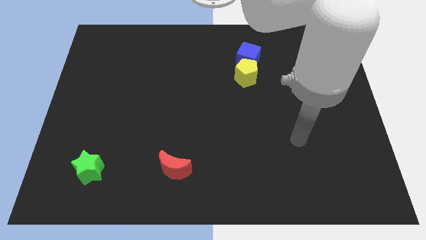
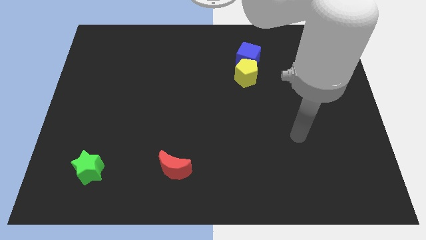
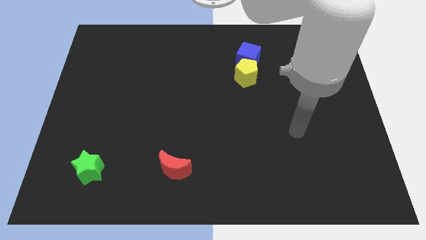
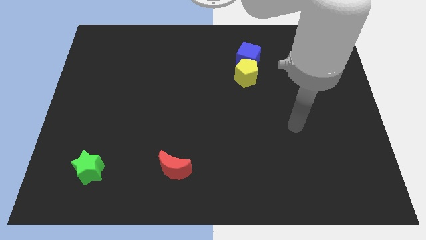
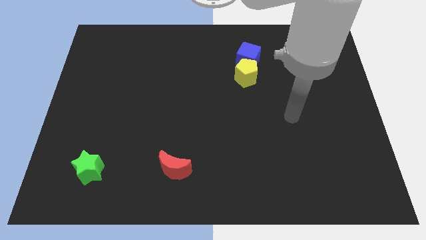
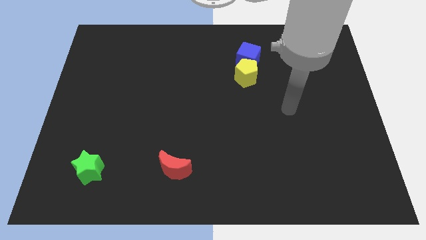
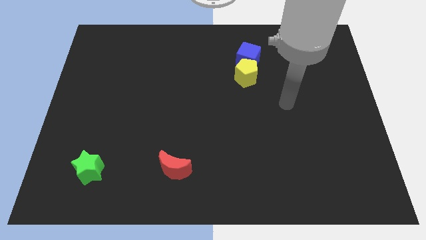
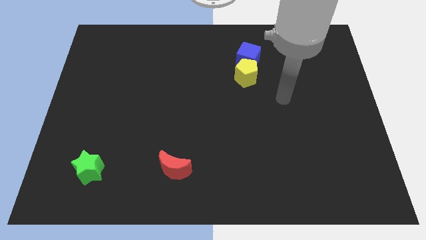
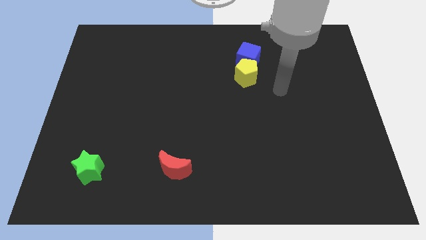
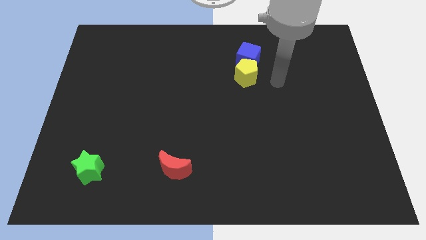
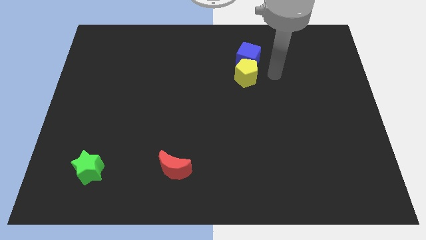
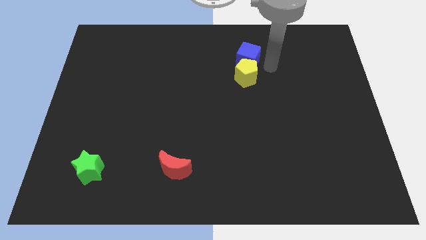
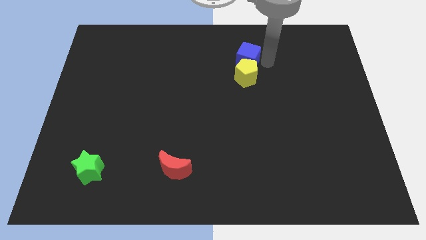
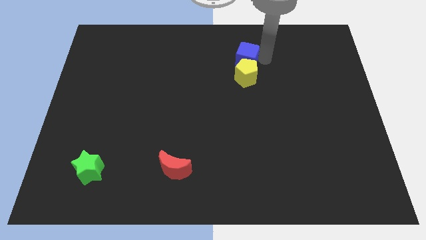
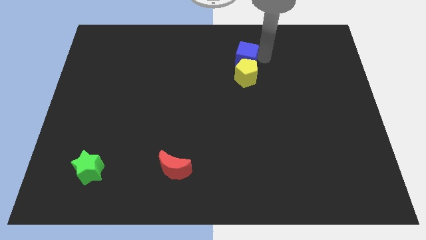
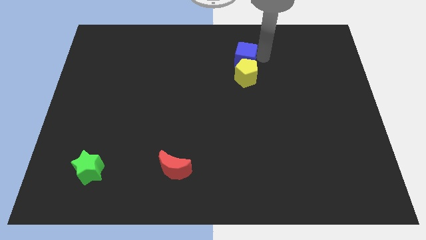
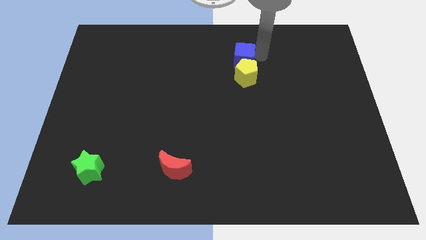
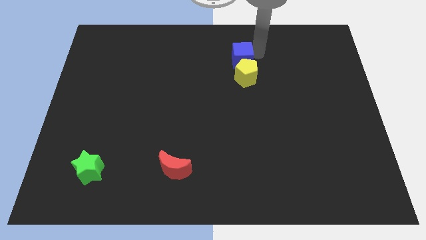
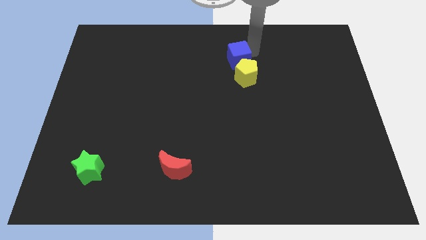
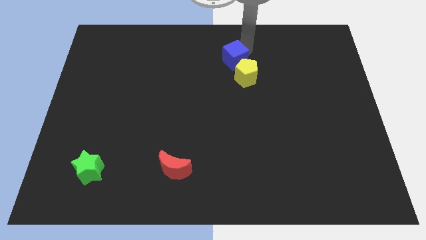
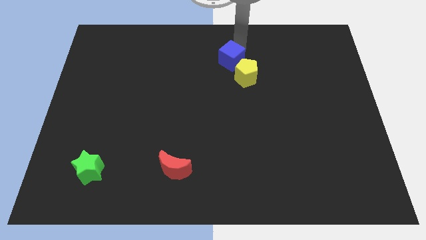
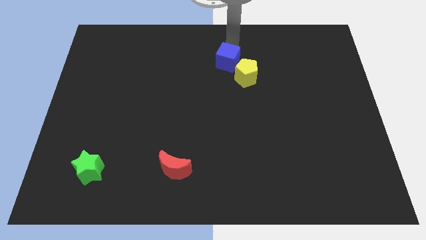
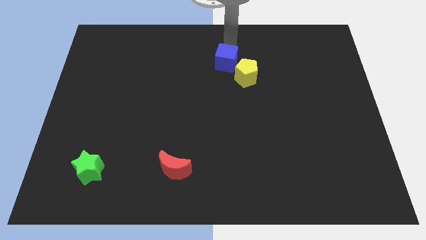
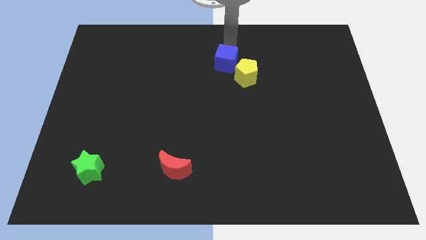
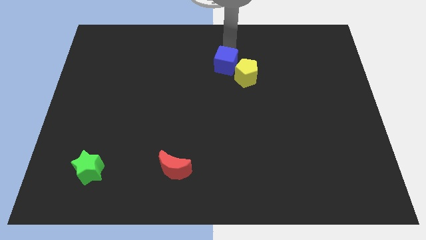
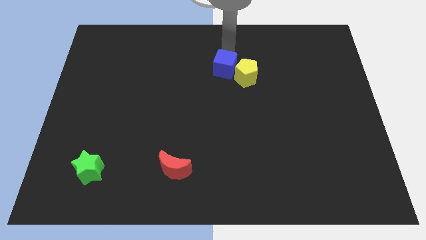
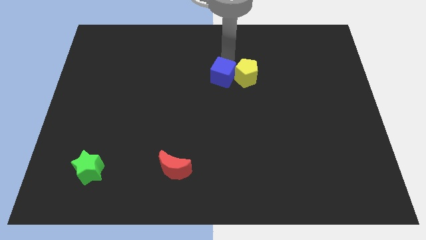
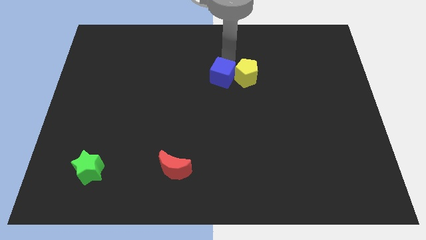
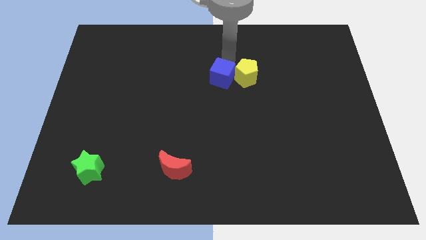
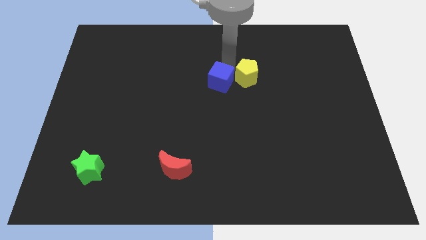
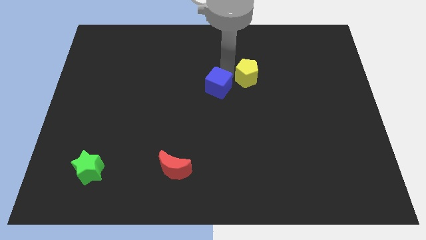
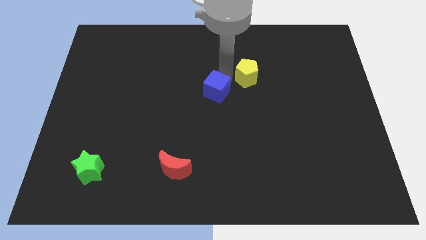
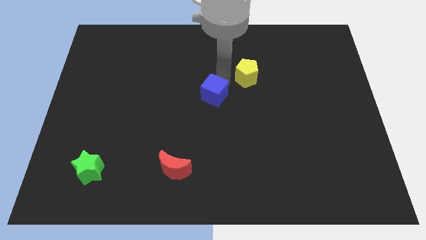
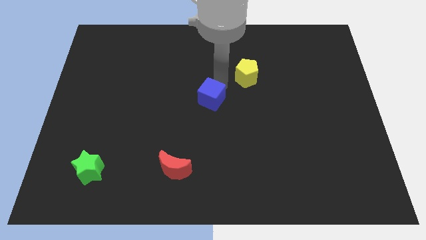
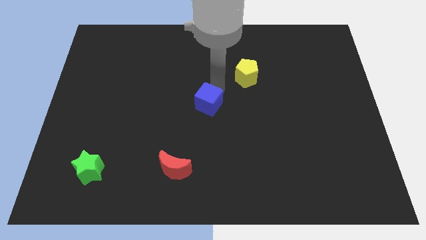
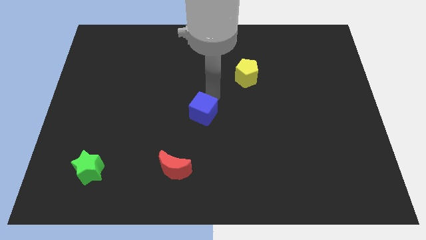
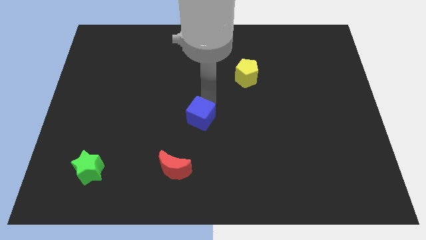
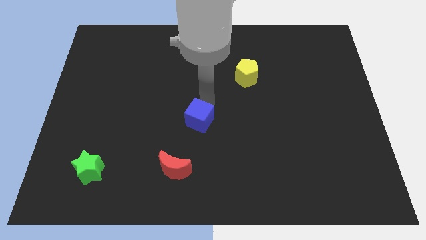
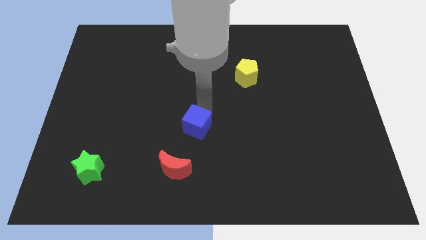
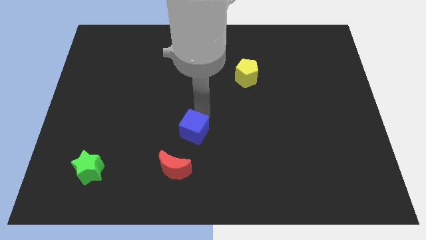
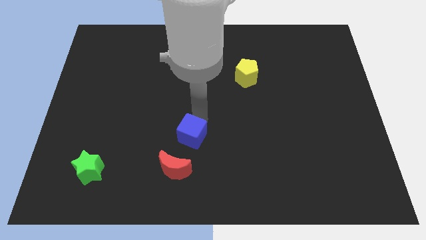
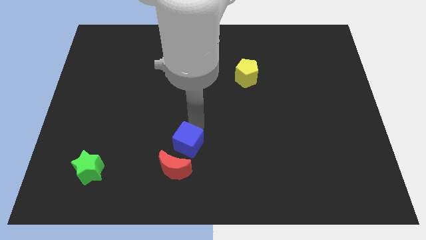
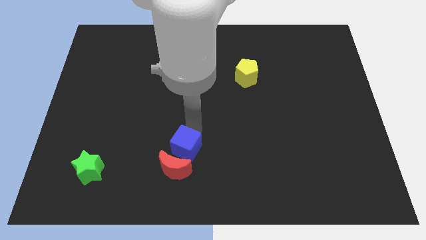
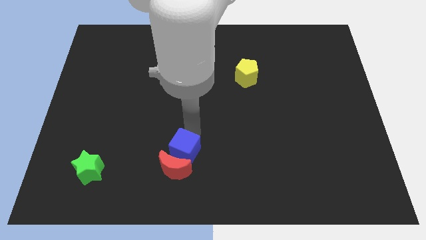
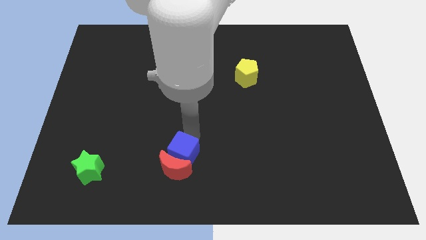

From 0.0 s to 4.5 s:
put the blue block to the red moon

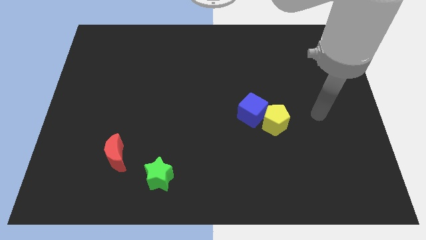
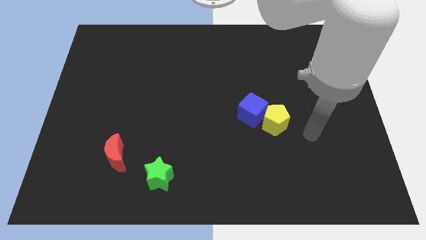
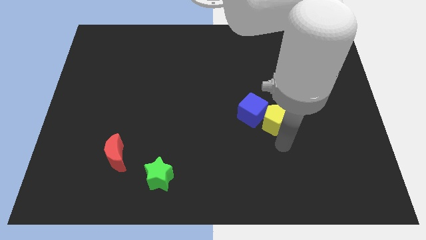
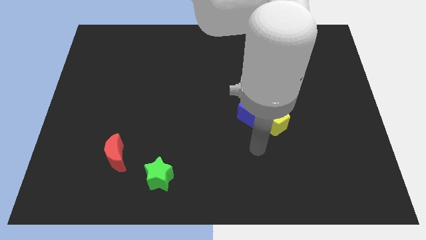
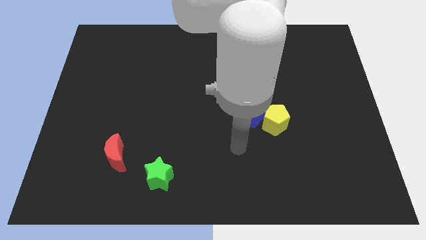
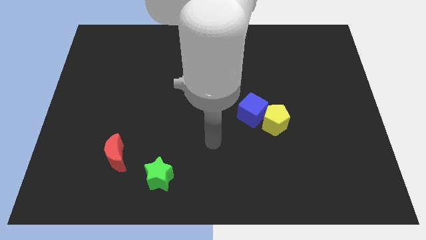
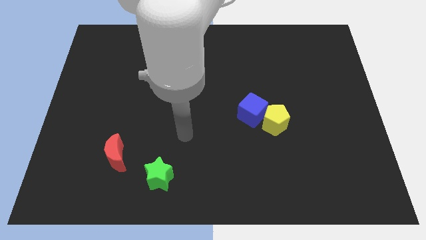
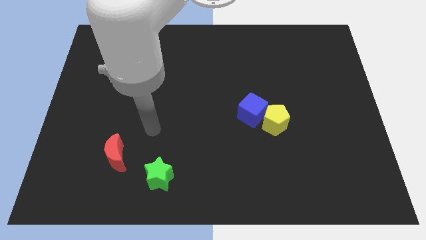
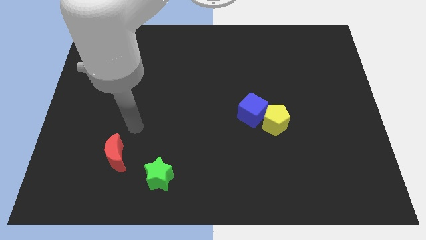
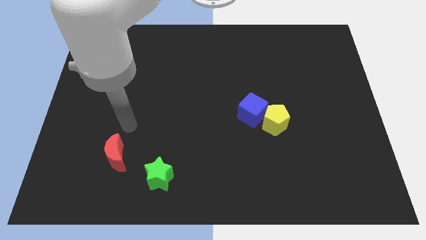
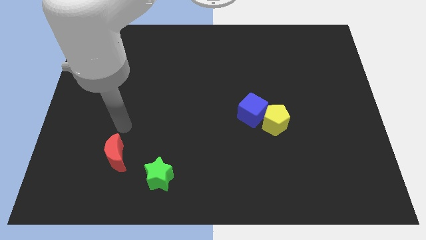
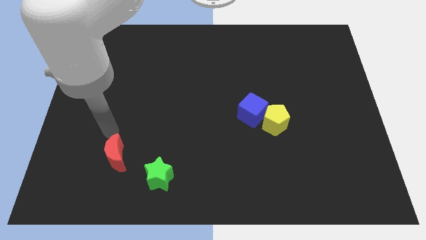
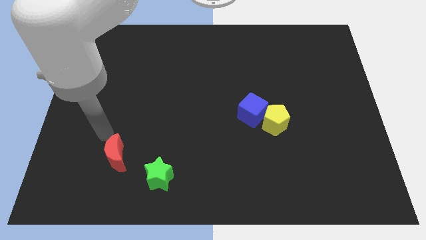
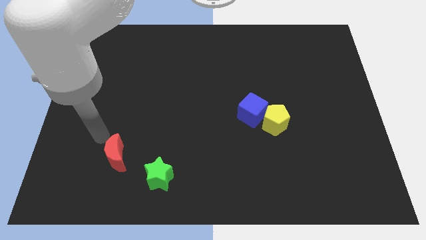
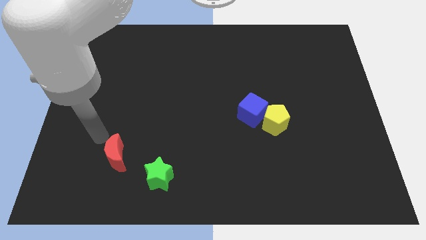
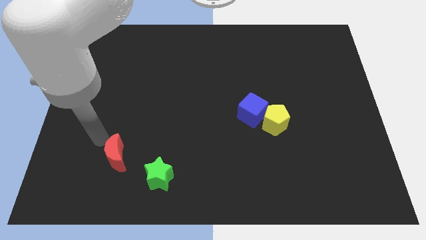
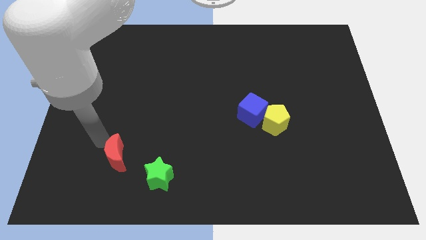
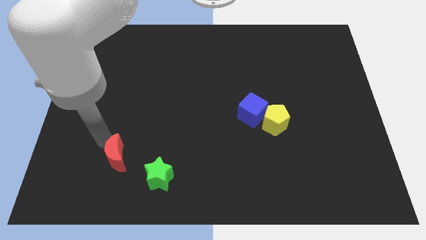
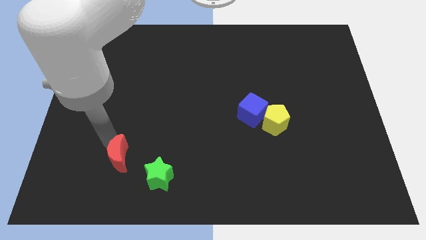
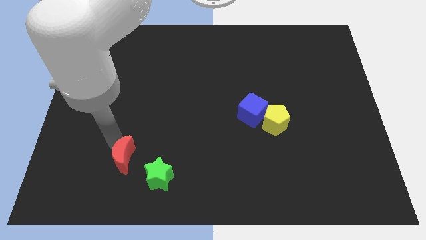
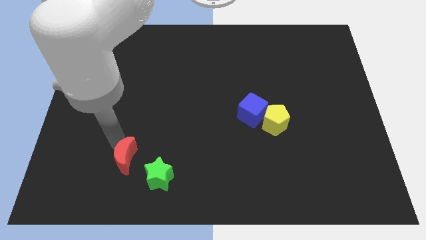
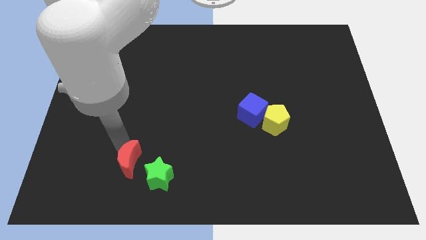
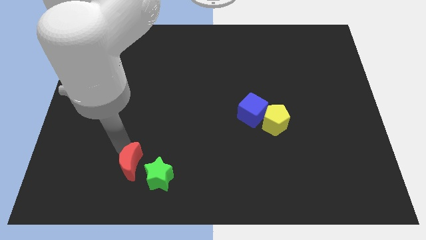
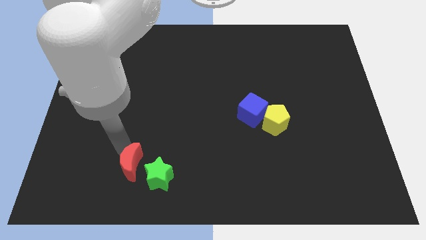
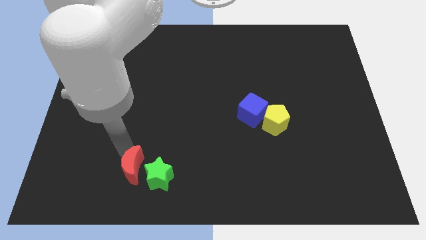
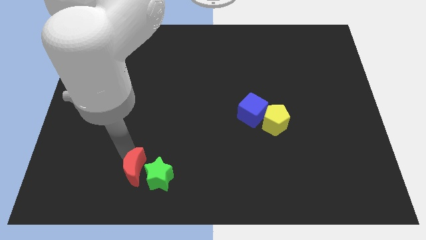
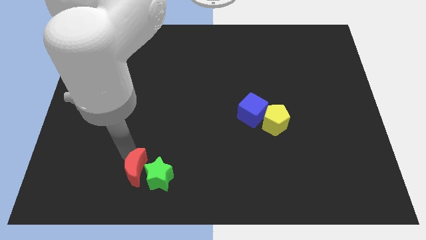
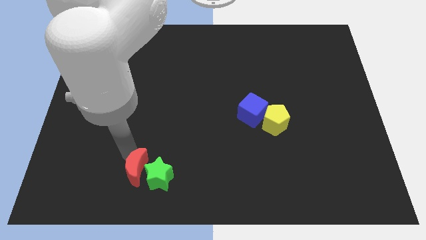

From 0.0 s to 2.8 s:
put the moon towards the green block

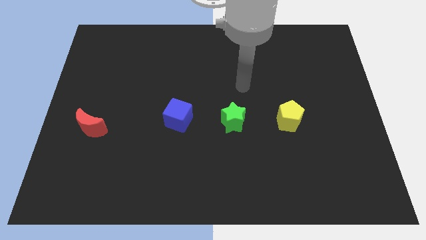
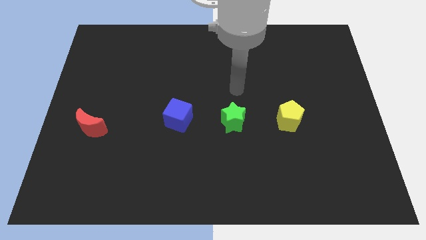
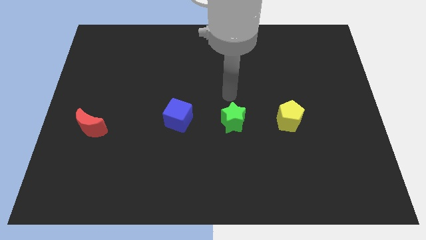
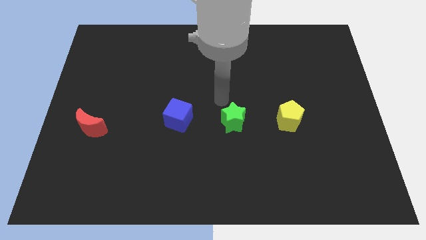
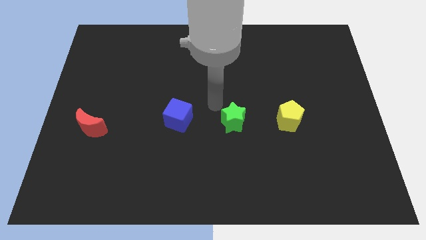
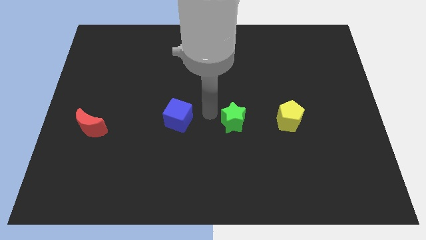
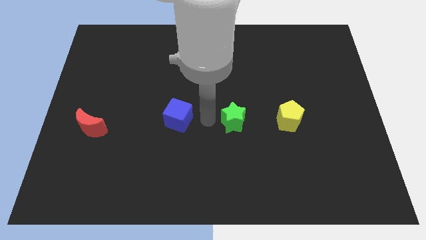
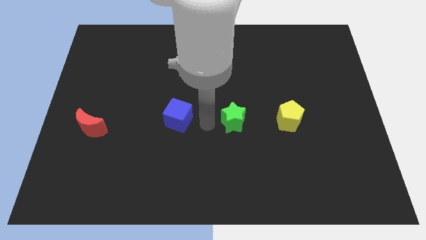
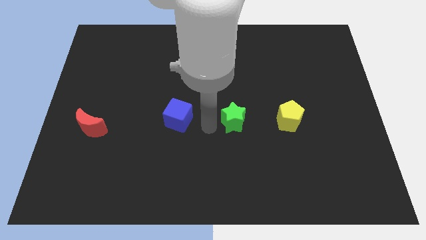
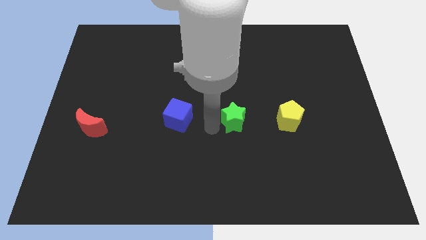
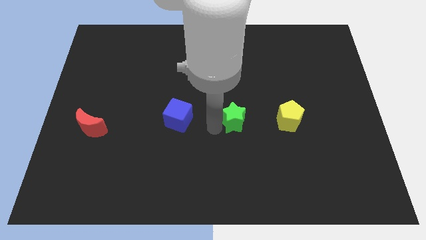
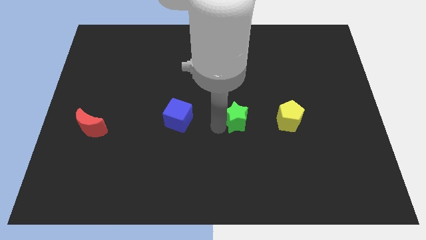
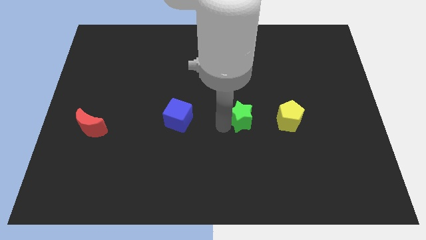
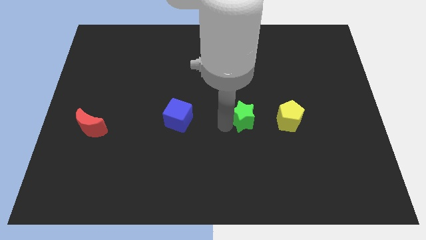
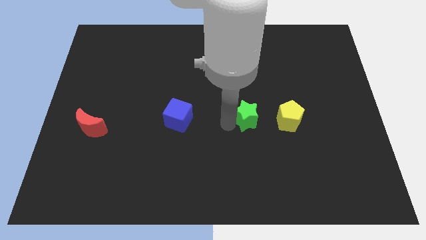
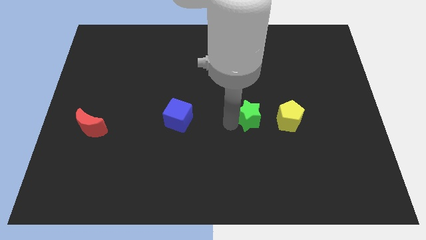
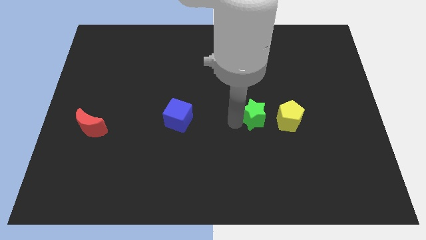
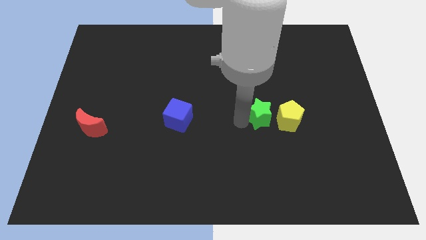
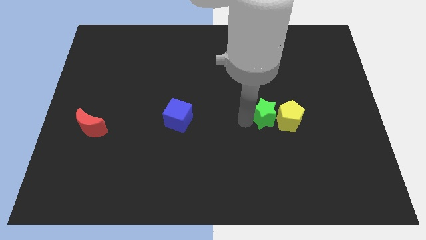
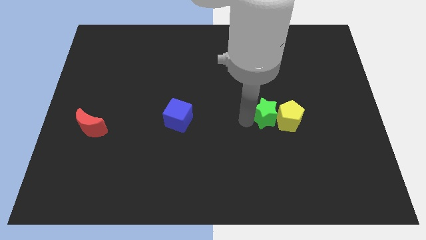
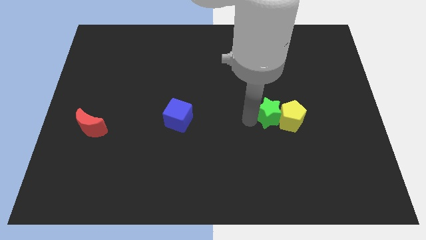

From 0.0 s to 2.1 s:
slide the star close to the yellow pentagon
